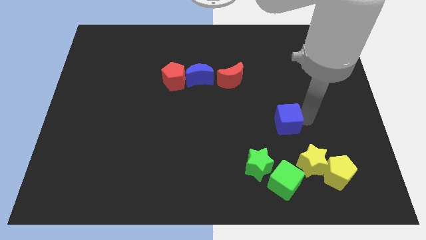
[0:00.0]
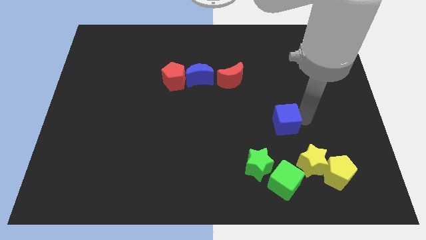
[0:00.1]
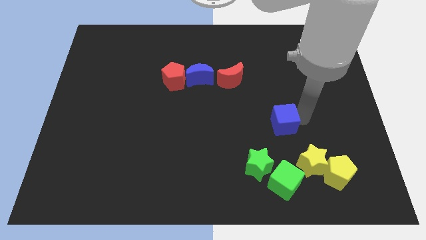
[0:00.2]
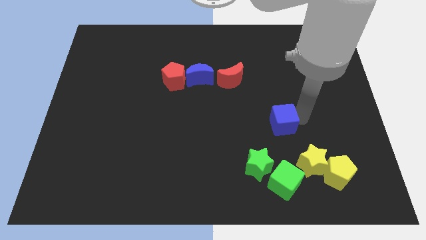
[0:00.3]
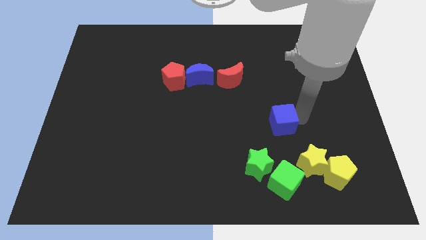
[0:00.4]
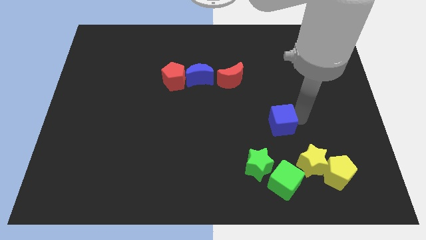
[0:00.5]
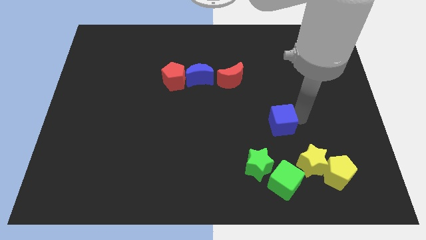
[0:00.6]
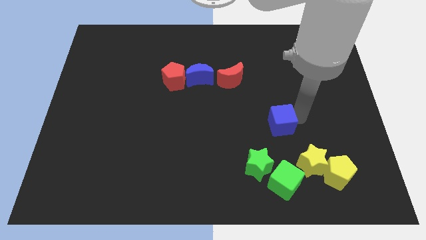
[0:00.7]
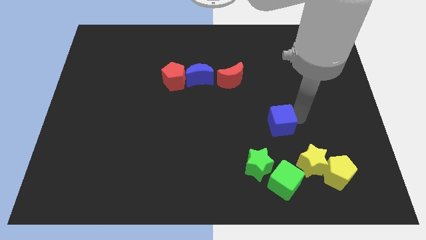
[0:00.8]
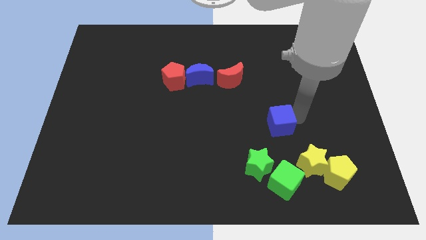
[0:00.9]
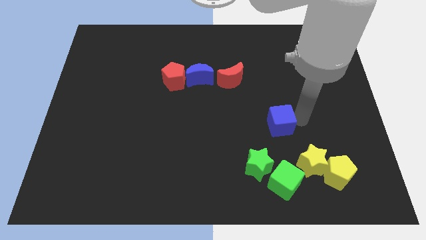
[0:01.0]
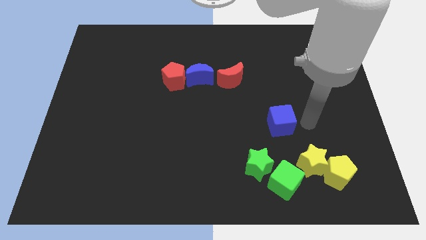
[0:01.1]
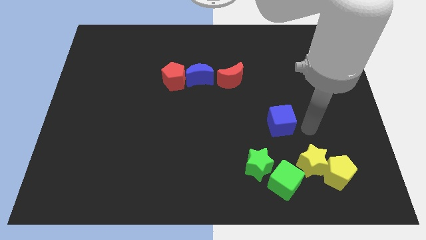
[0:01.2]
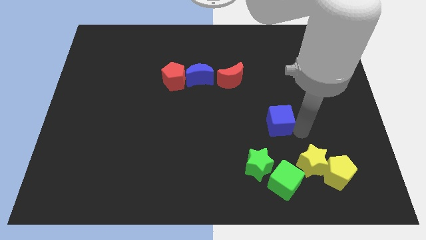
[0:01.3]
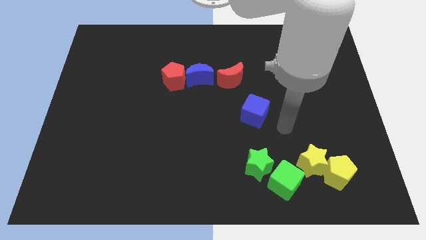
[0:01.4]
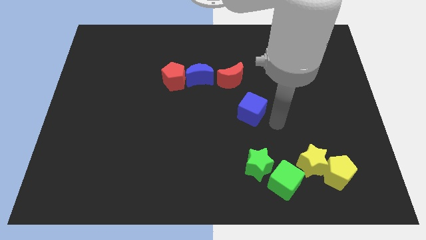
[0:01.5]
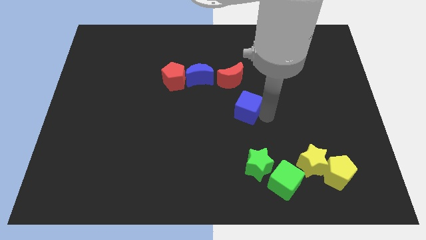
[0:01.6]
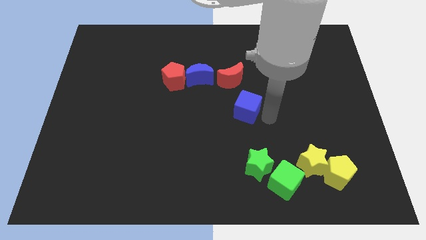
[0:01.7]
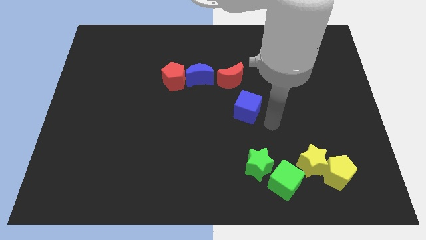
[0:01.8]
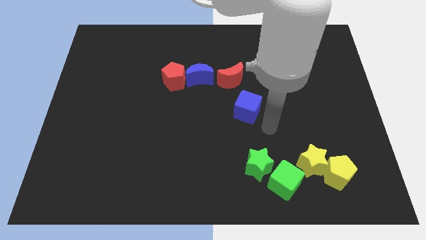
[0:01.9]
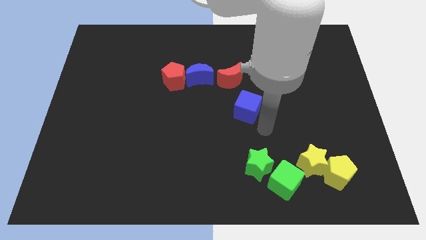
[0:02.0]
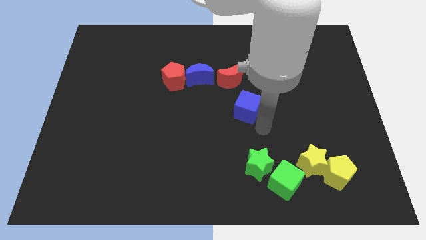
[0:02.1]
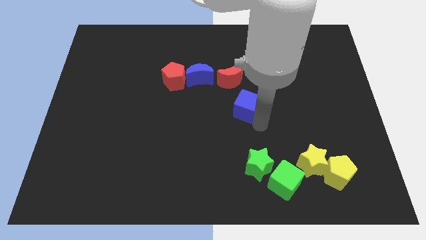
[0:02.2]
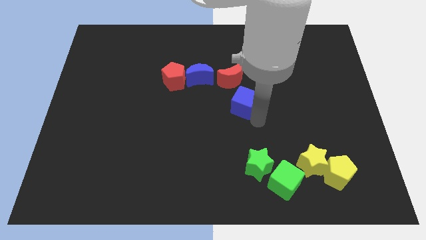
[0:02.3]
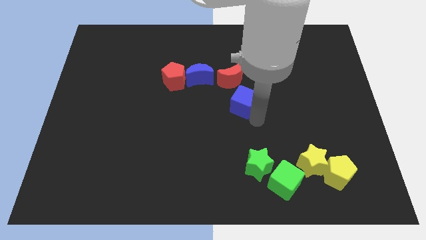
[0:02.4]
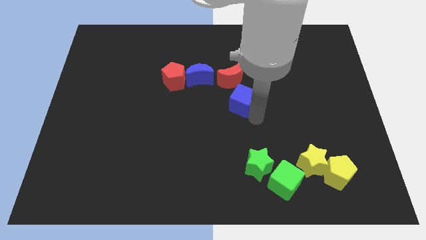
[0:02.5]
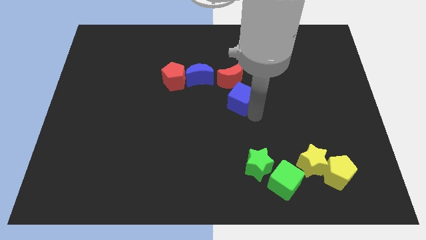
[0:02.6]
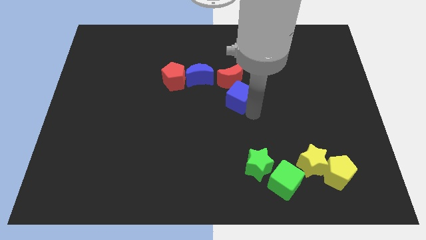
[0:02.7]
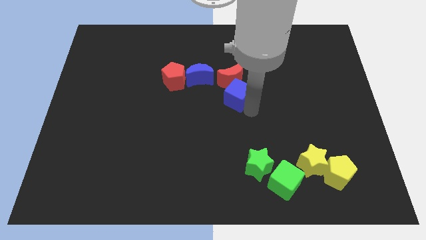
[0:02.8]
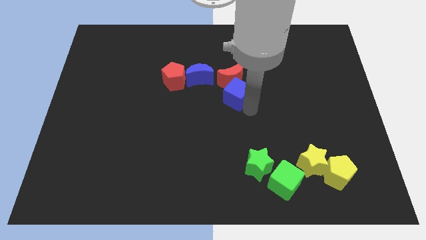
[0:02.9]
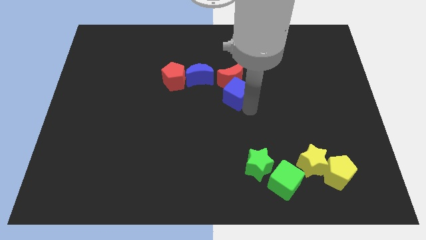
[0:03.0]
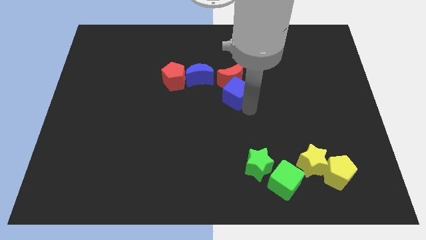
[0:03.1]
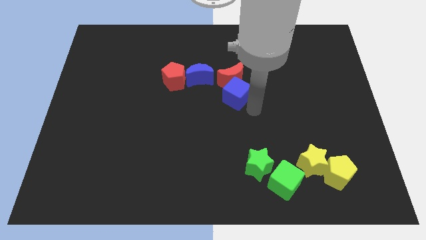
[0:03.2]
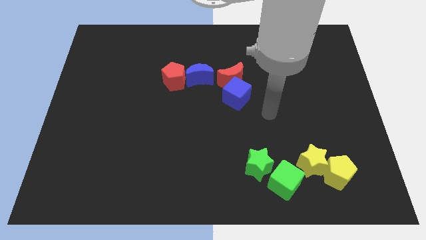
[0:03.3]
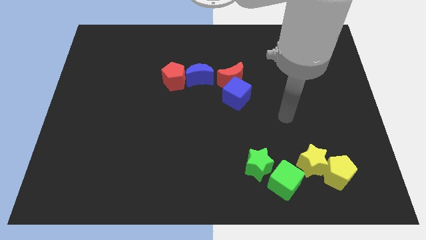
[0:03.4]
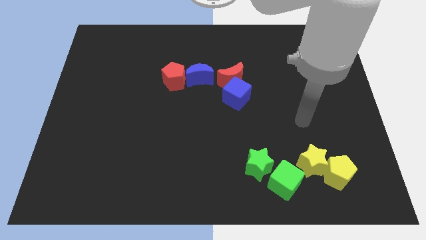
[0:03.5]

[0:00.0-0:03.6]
push the blue cube into the red crescent

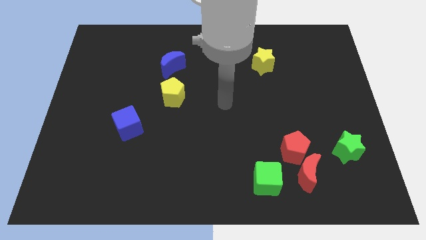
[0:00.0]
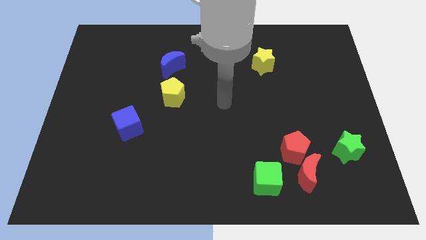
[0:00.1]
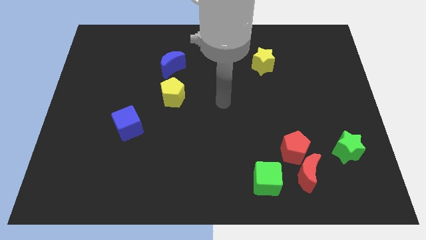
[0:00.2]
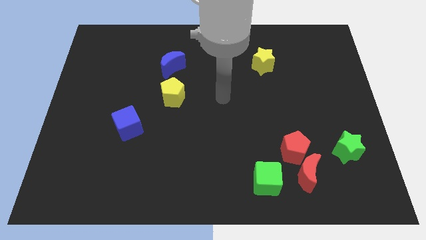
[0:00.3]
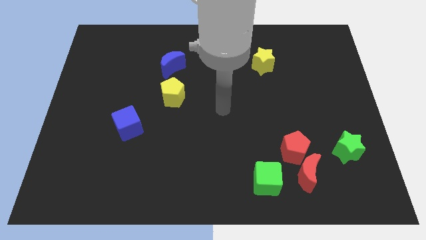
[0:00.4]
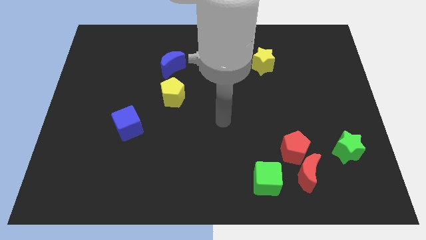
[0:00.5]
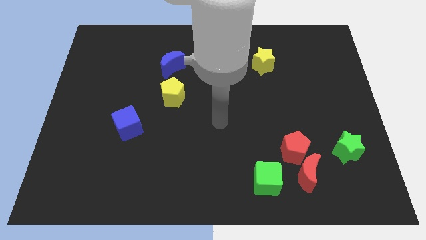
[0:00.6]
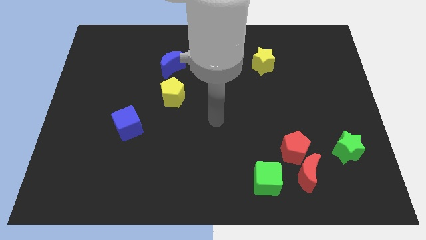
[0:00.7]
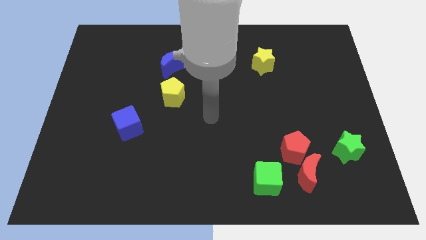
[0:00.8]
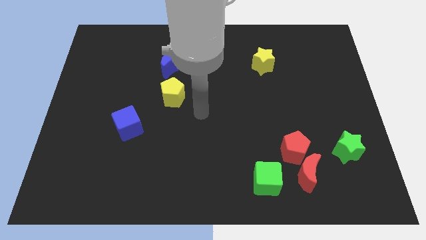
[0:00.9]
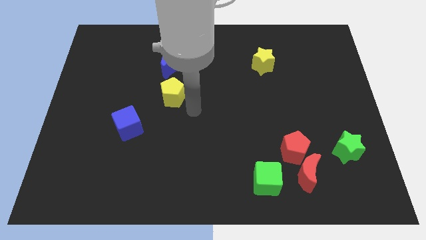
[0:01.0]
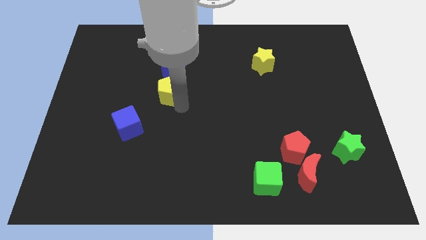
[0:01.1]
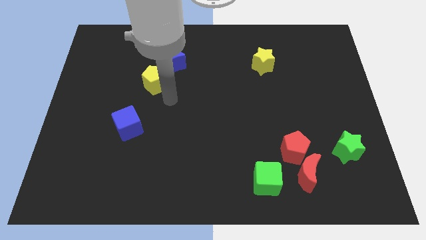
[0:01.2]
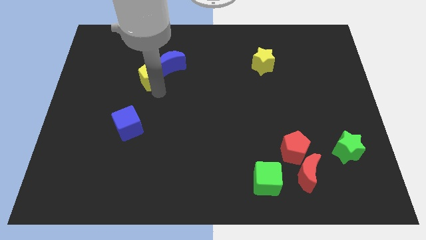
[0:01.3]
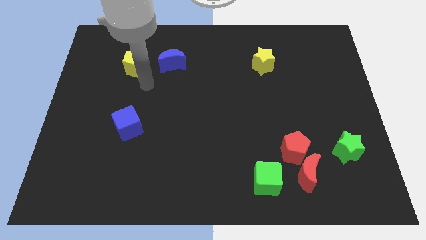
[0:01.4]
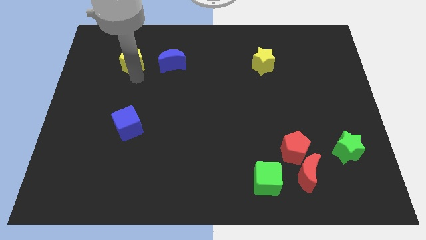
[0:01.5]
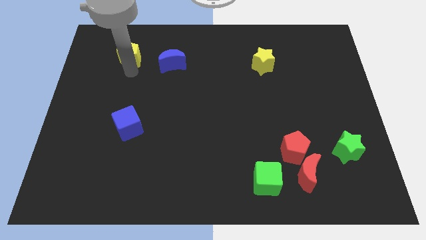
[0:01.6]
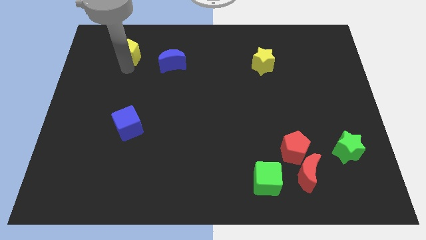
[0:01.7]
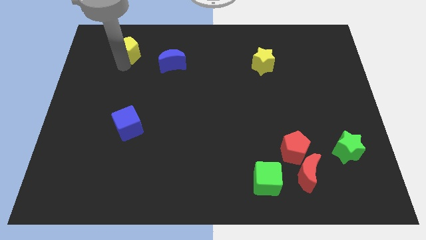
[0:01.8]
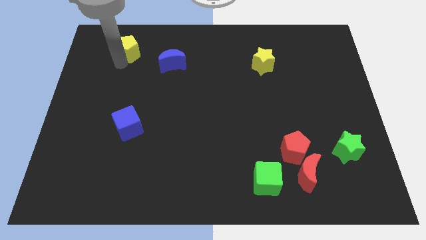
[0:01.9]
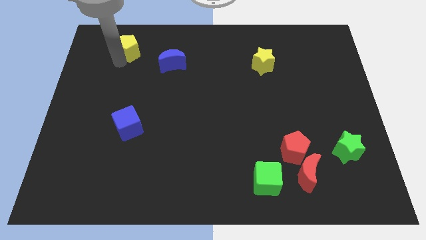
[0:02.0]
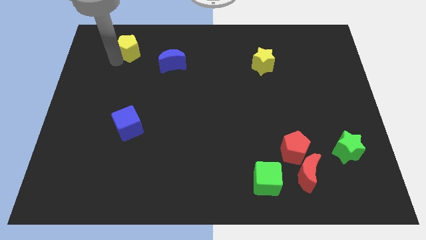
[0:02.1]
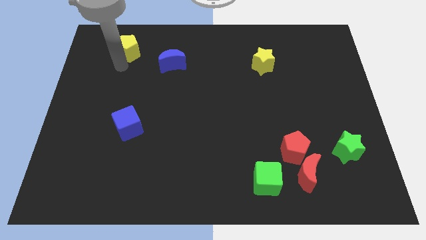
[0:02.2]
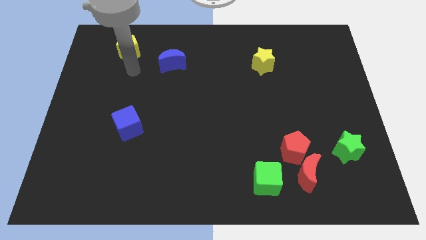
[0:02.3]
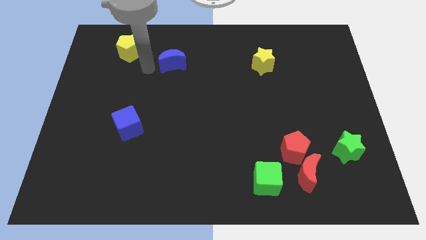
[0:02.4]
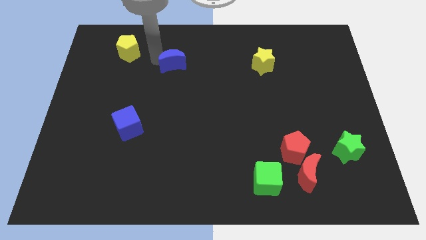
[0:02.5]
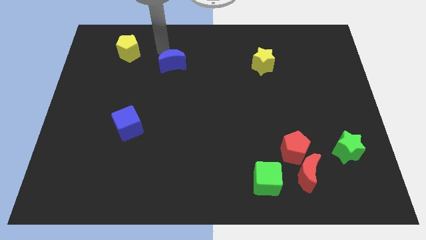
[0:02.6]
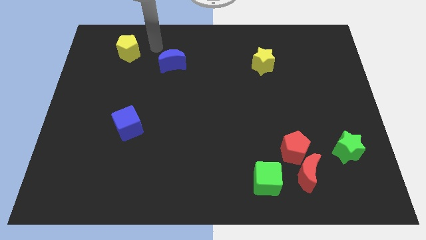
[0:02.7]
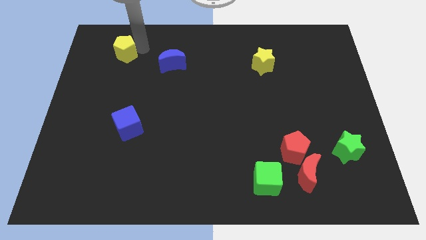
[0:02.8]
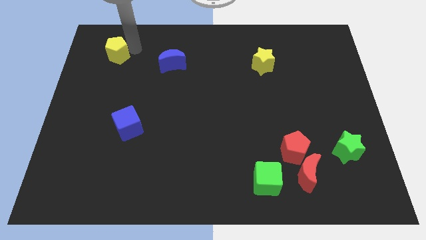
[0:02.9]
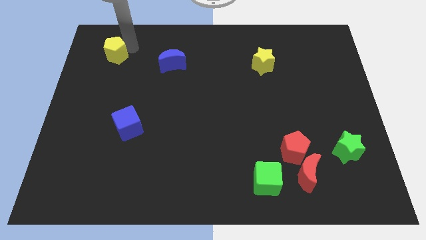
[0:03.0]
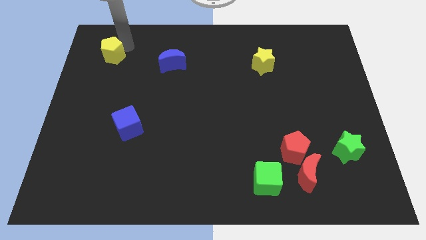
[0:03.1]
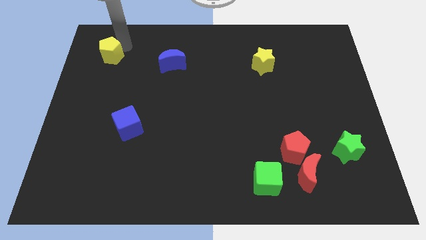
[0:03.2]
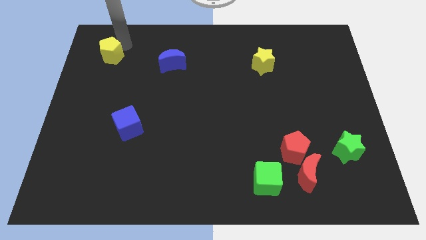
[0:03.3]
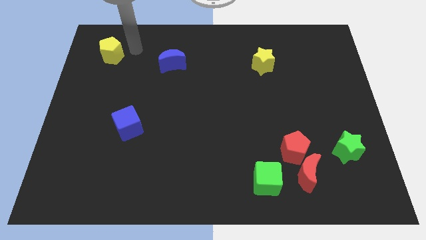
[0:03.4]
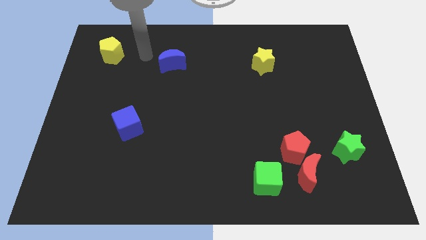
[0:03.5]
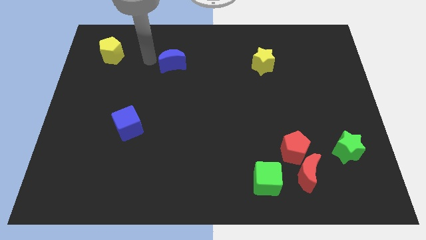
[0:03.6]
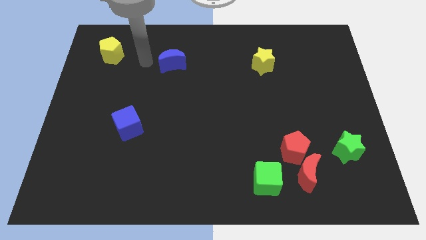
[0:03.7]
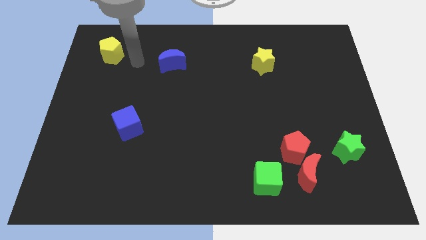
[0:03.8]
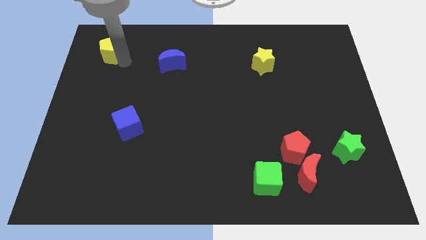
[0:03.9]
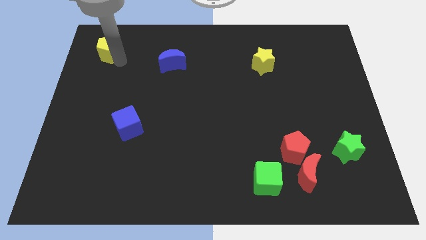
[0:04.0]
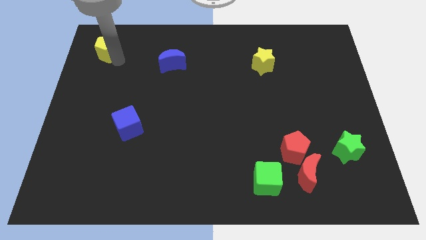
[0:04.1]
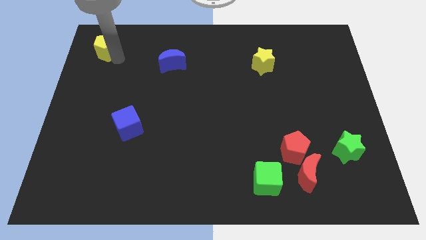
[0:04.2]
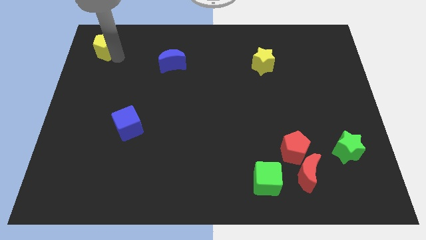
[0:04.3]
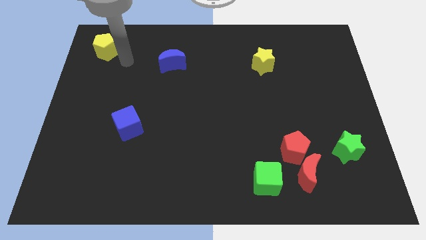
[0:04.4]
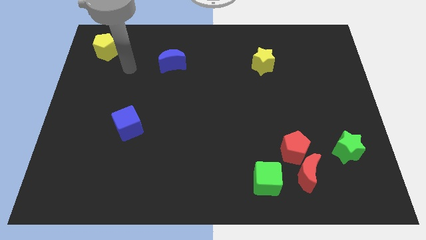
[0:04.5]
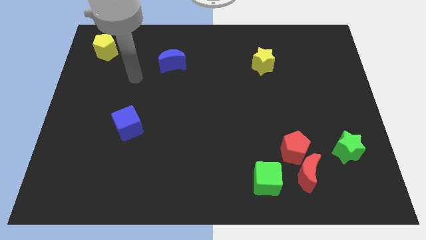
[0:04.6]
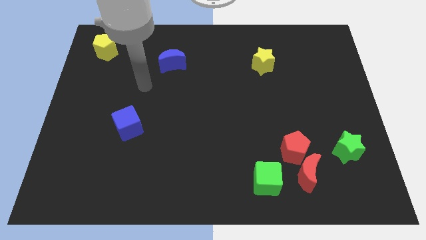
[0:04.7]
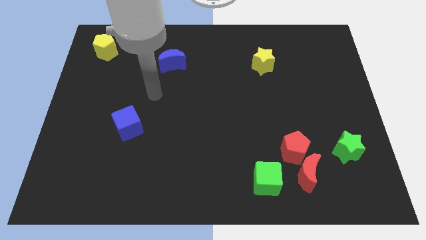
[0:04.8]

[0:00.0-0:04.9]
place the yellow pentagon at the top left side
